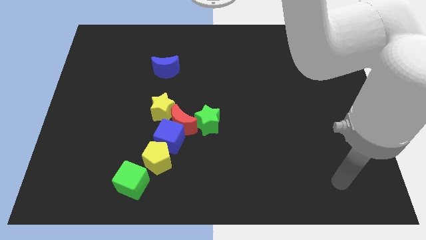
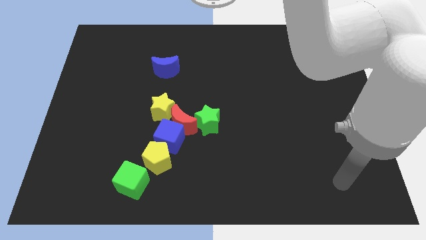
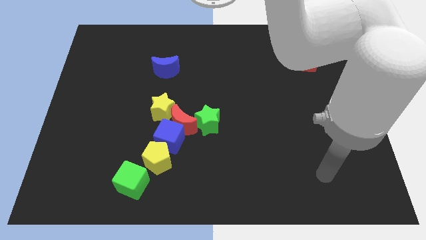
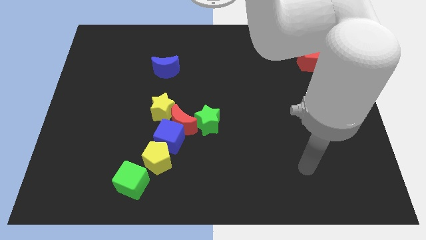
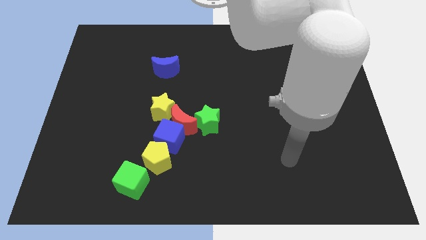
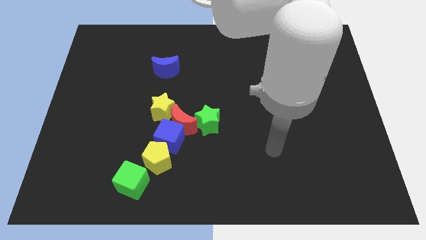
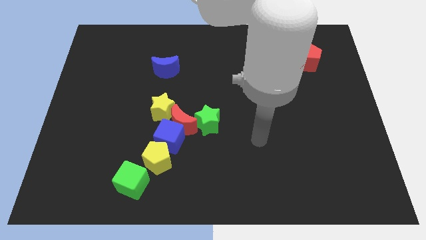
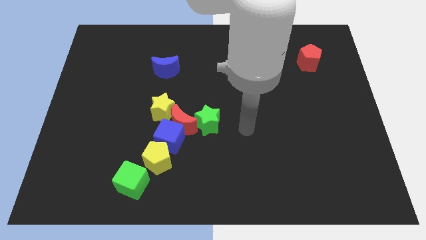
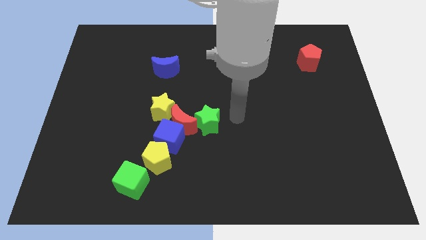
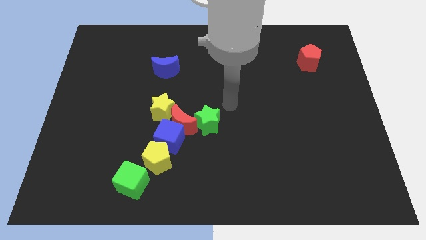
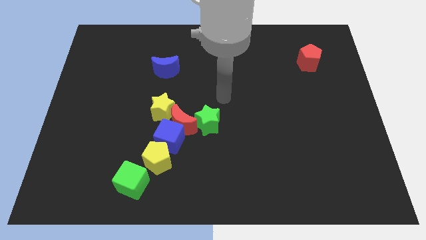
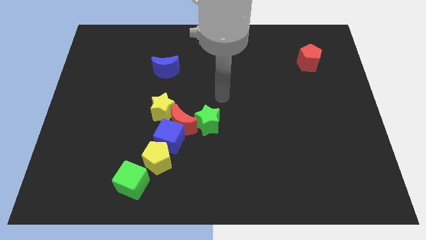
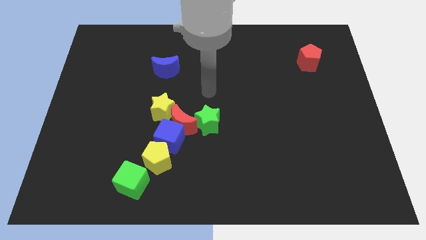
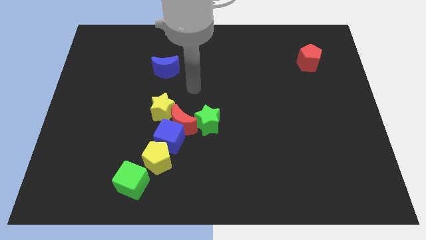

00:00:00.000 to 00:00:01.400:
place your hand vertically above the green star

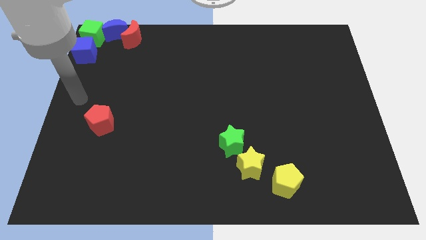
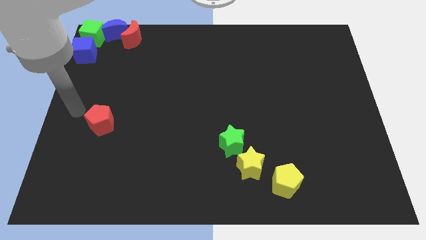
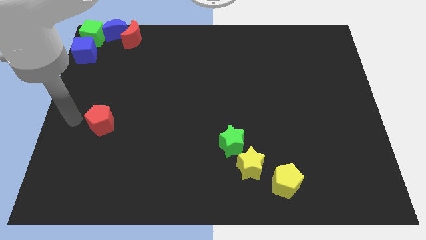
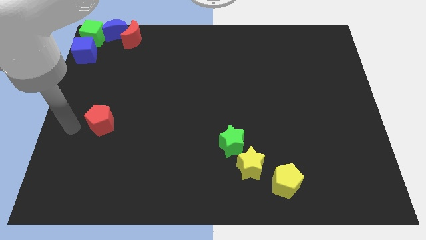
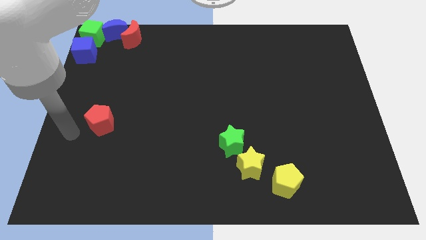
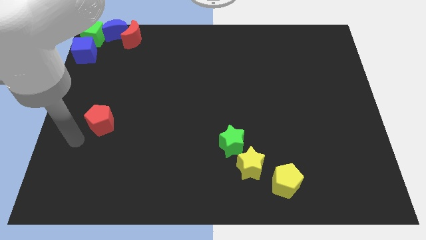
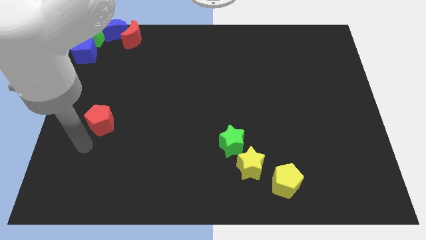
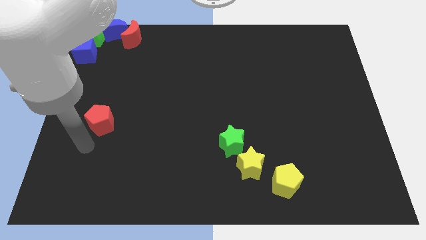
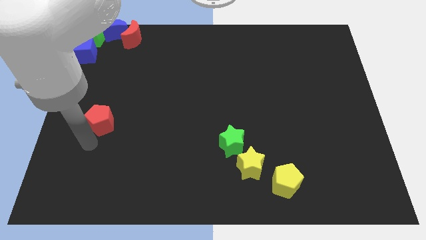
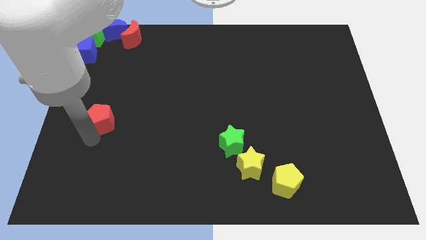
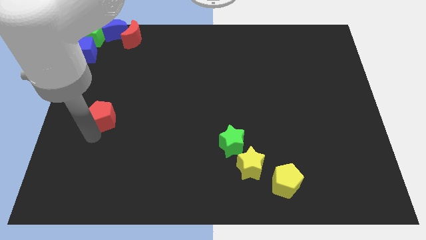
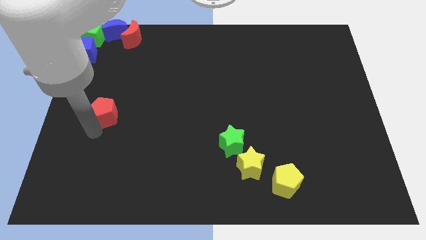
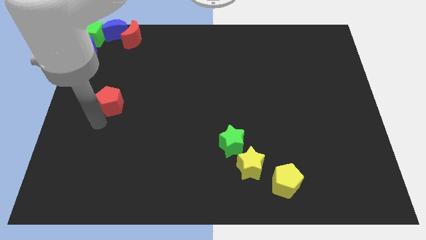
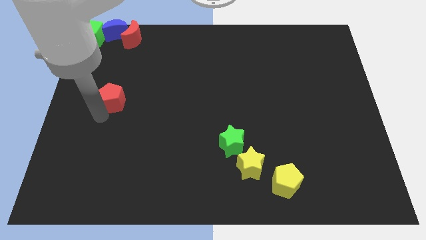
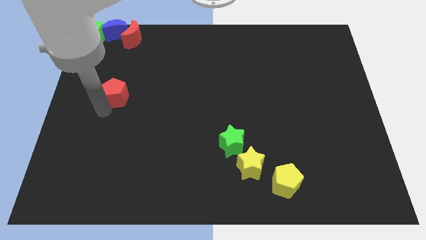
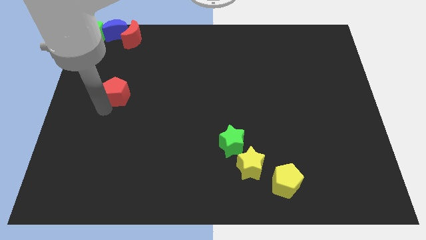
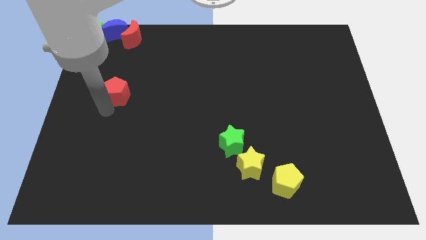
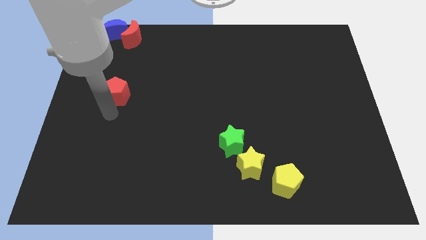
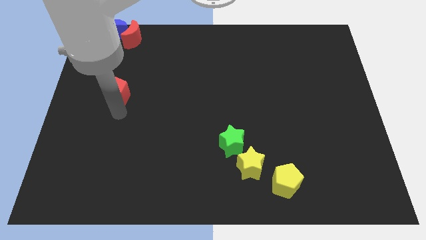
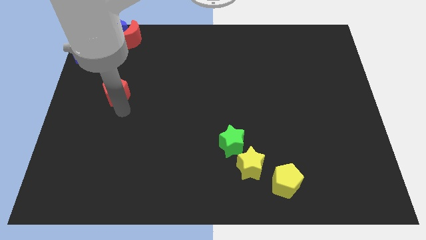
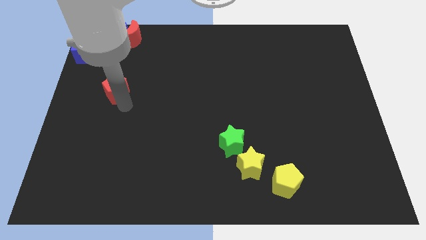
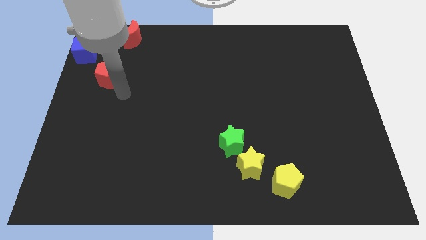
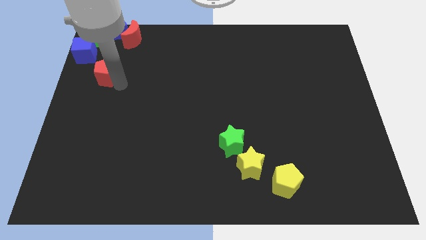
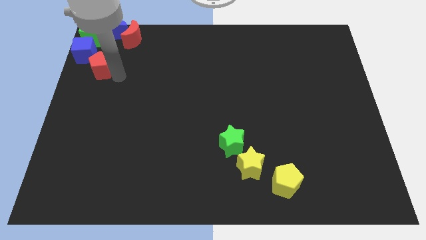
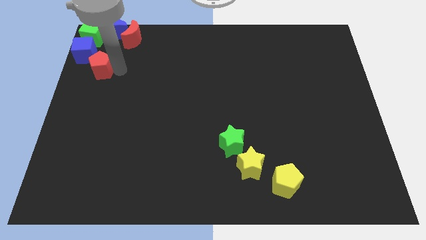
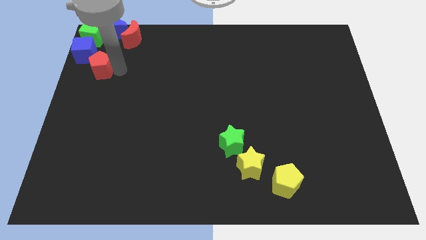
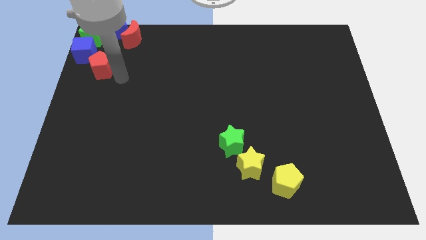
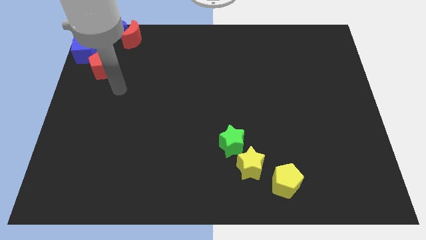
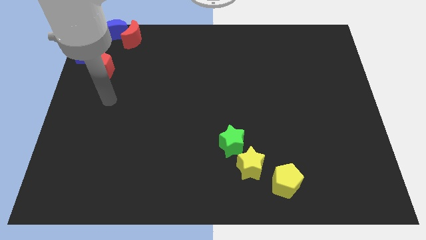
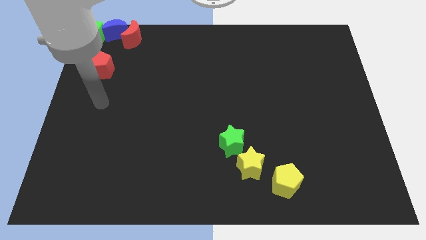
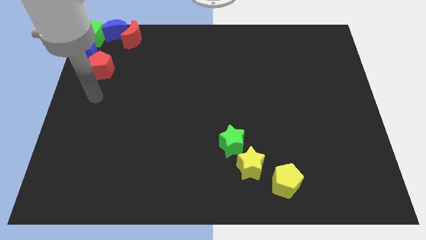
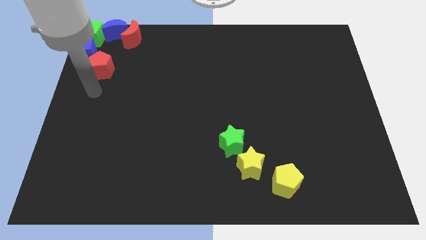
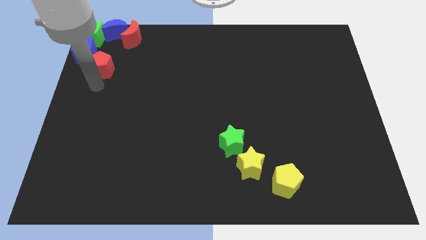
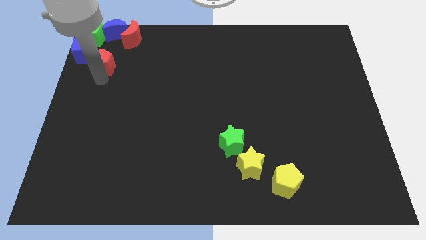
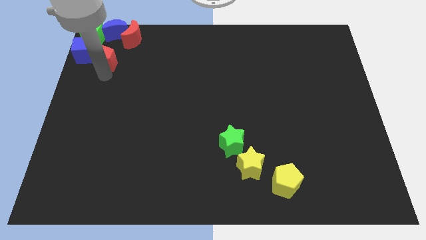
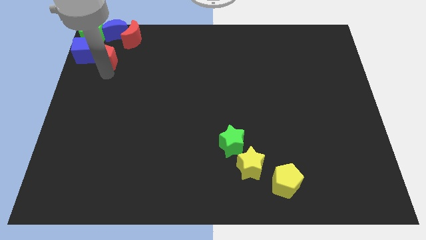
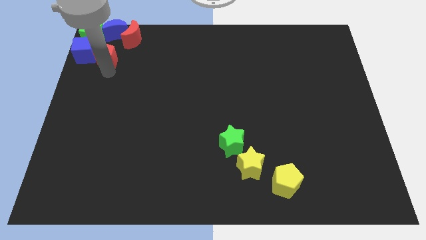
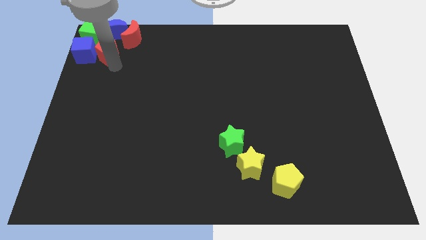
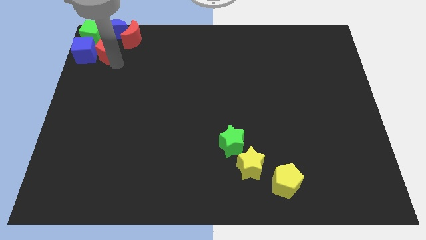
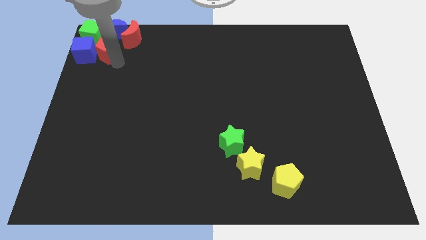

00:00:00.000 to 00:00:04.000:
slide the red pentagon into the right side of the blue cube

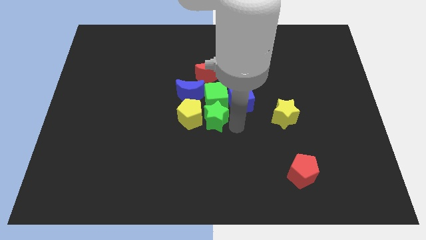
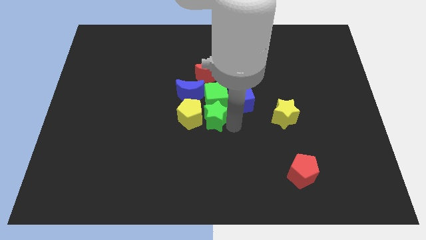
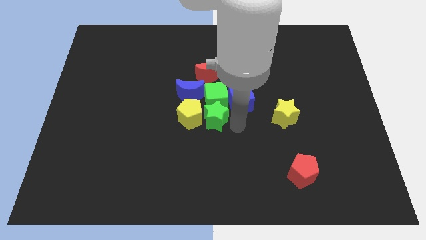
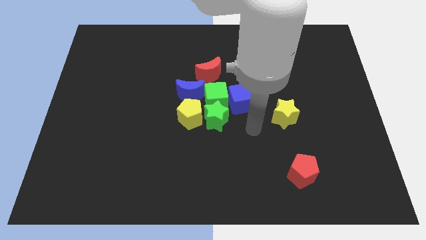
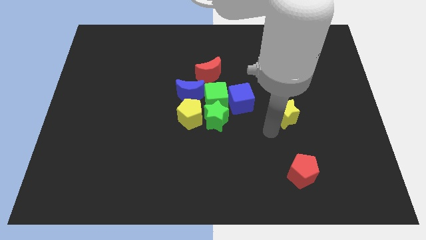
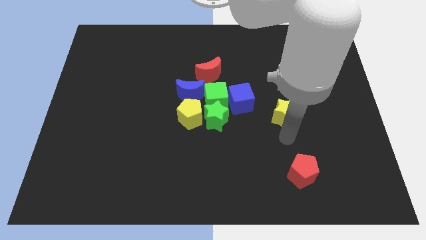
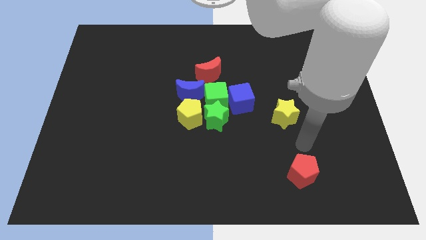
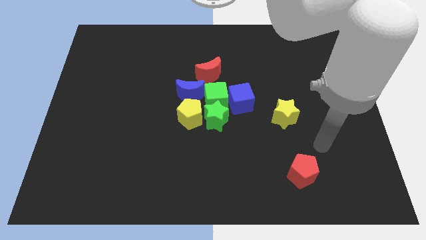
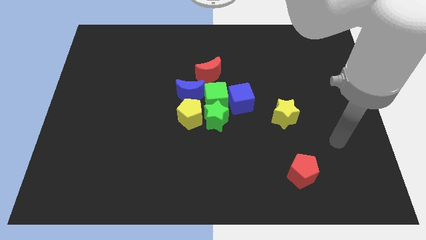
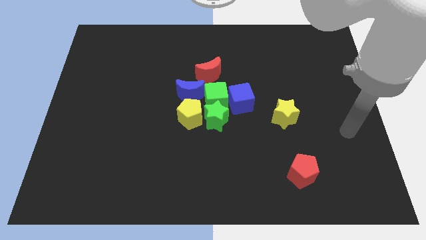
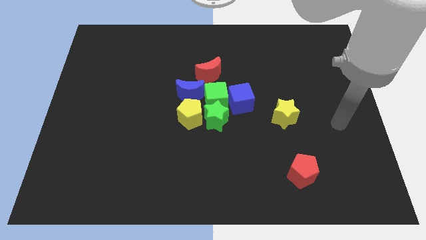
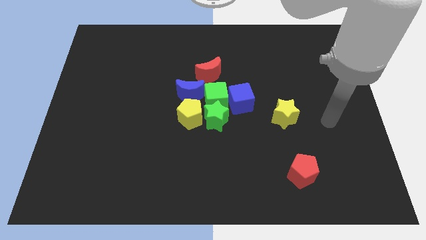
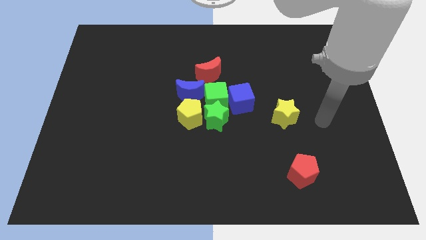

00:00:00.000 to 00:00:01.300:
move the arm away from the green star

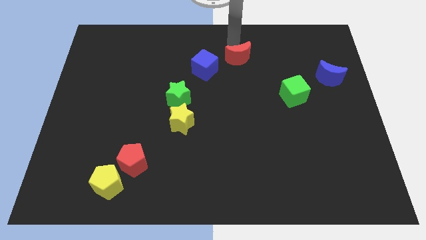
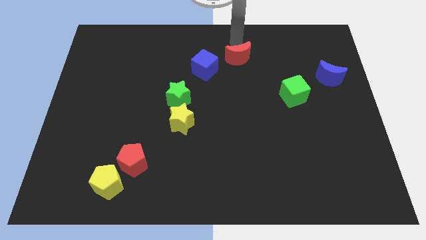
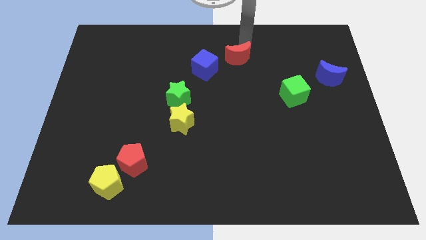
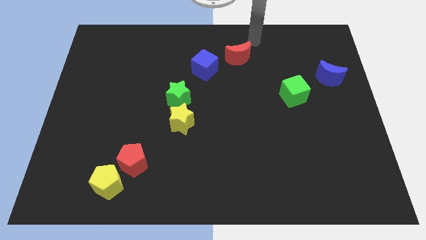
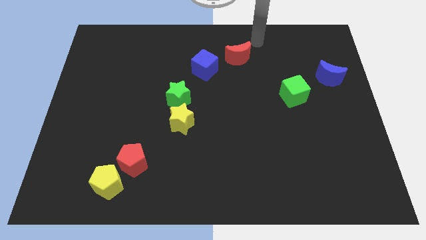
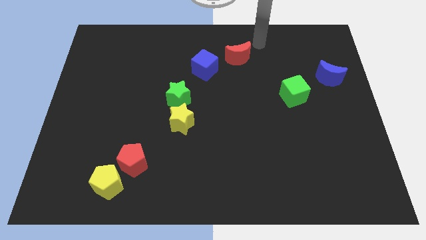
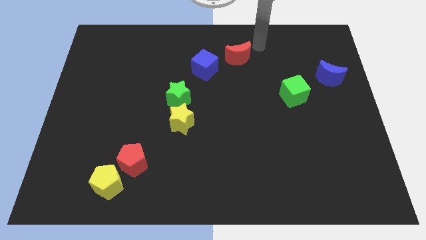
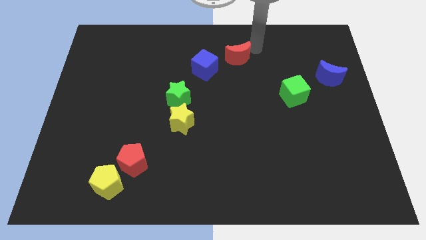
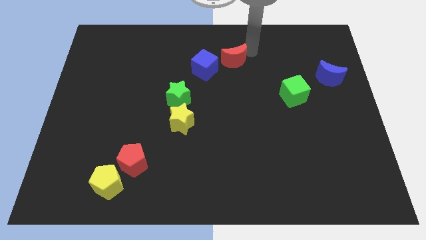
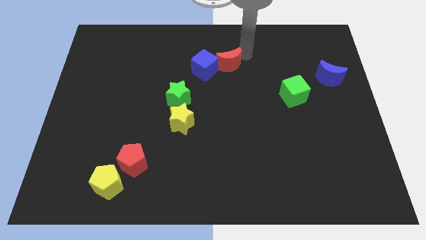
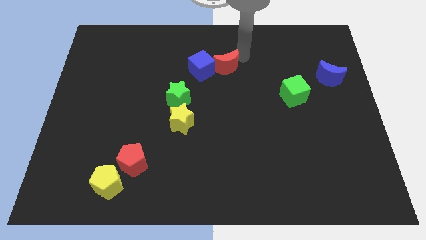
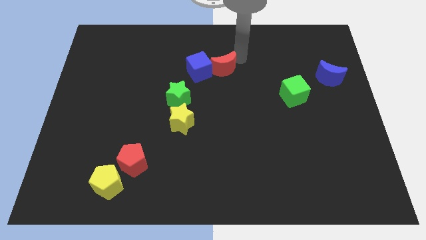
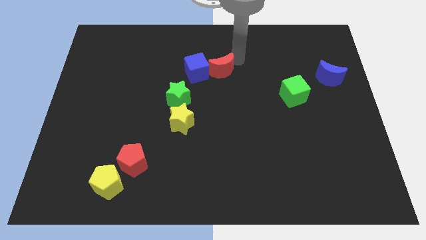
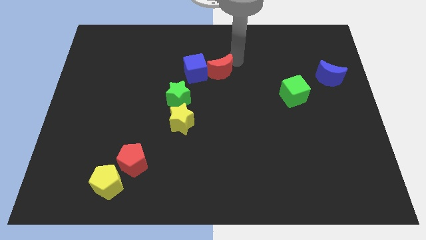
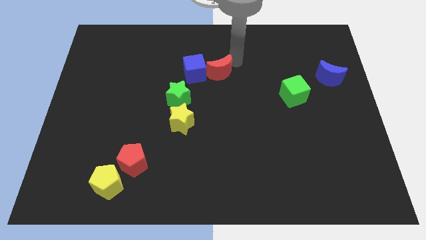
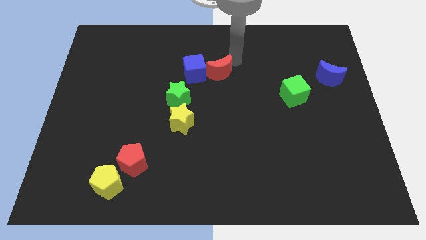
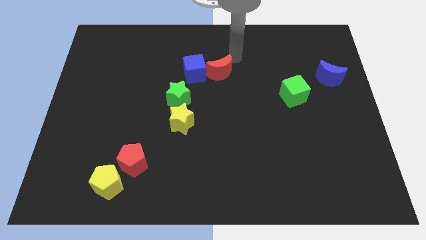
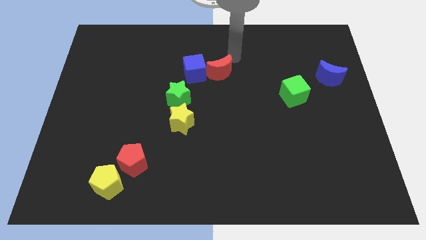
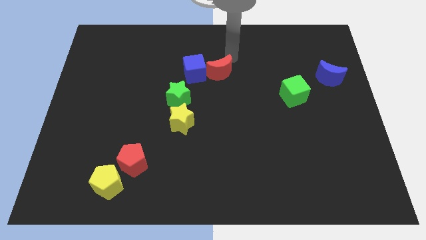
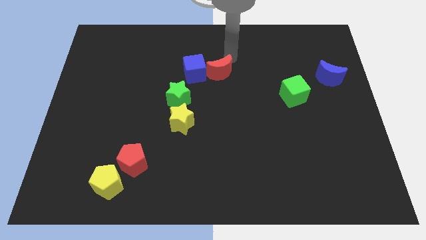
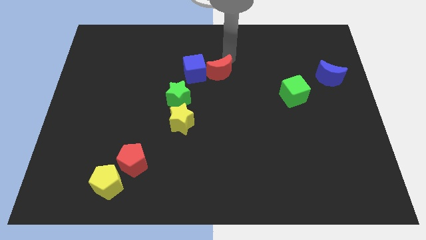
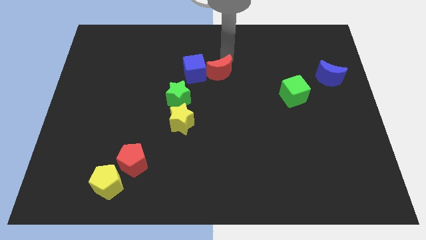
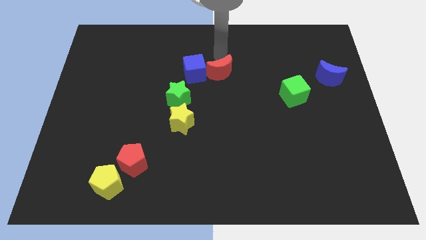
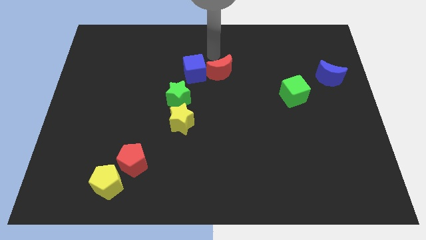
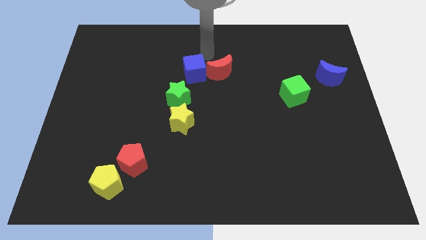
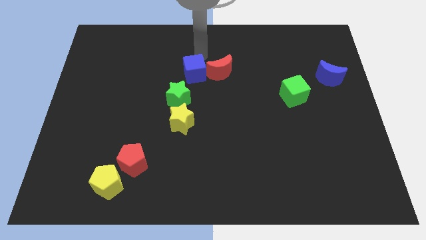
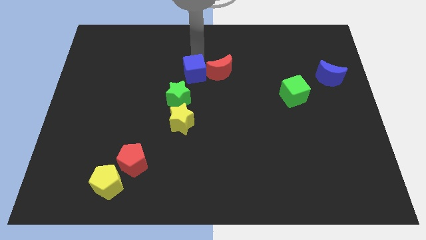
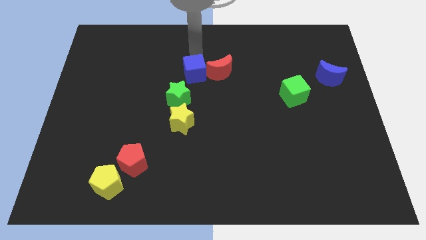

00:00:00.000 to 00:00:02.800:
push the red crescent into the blue cube
